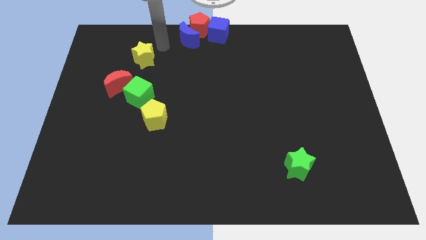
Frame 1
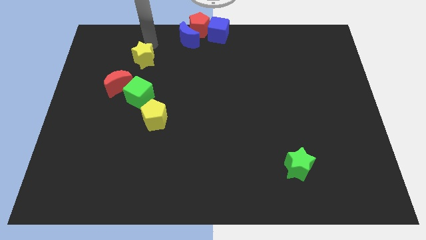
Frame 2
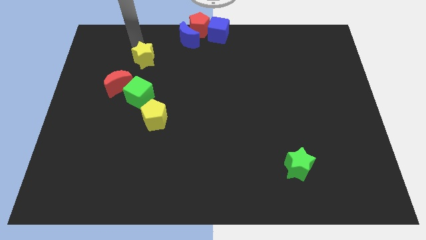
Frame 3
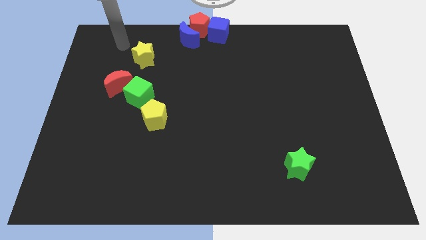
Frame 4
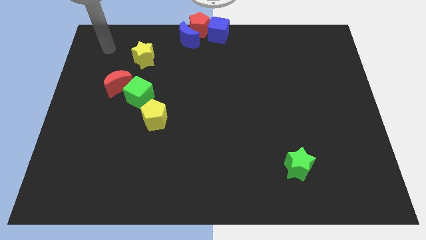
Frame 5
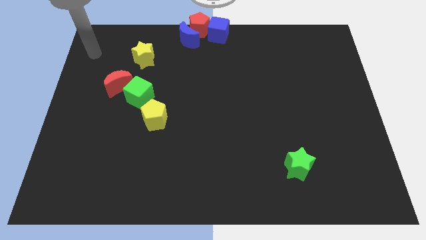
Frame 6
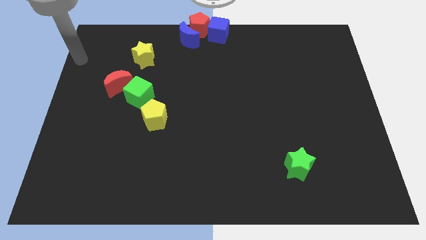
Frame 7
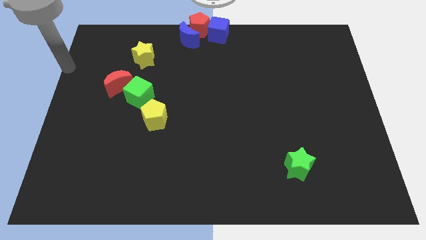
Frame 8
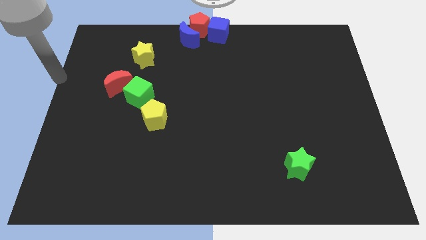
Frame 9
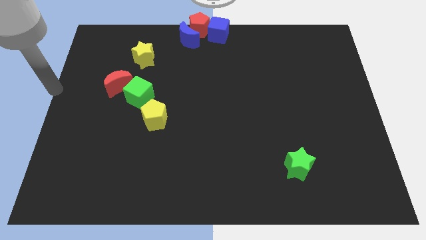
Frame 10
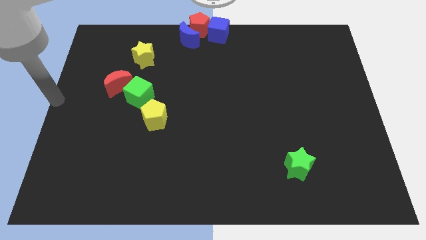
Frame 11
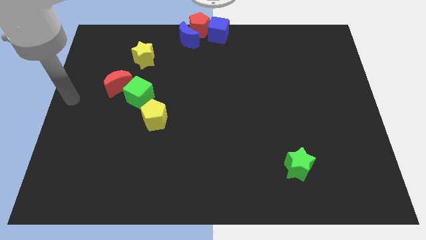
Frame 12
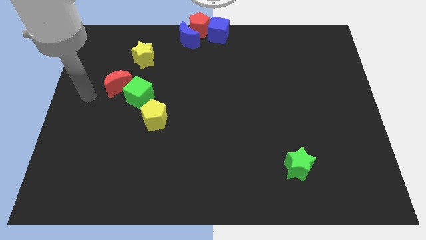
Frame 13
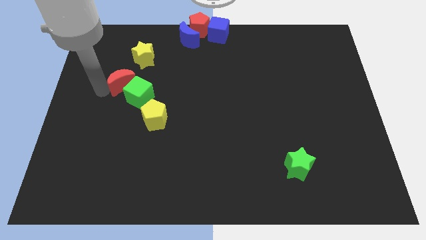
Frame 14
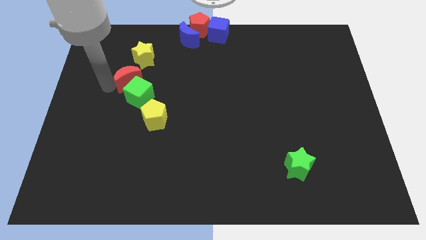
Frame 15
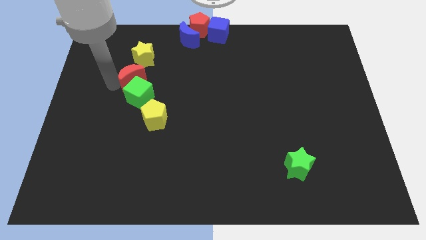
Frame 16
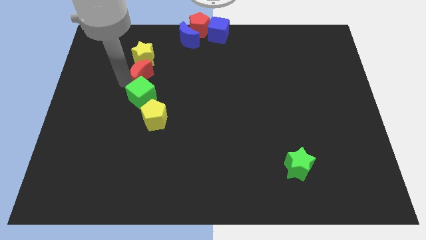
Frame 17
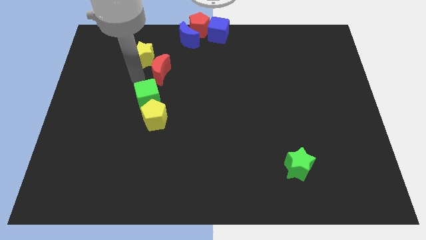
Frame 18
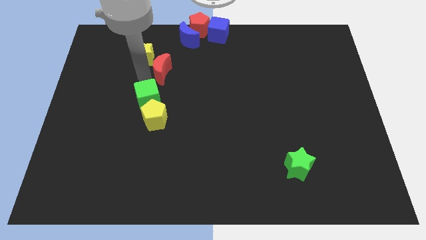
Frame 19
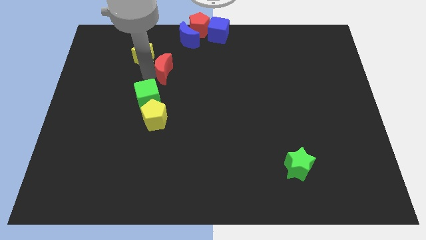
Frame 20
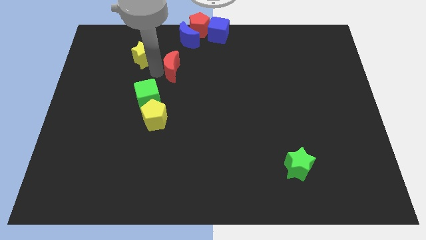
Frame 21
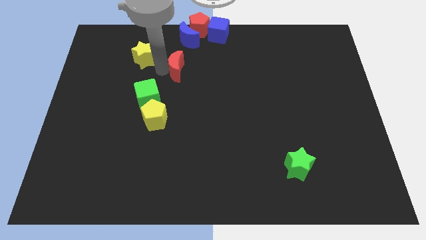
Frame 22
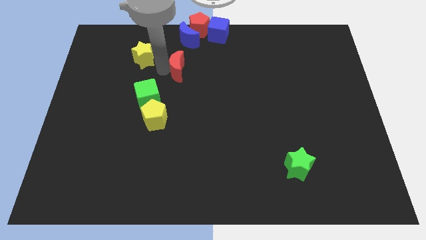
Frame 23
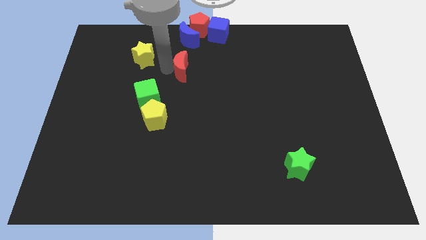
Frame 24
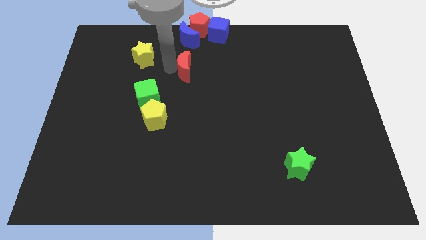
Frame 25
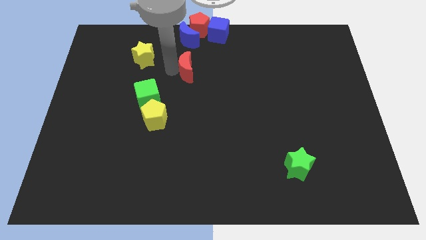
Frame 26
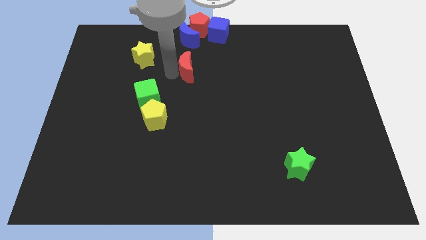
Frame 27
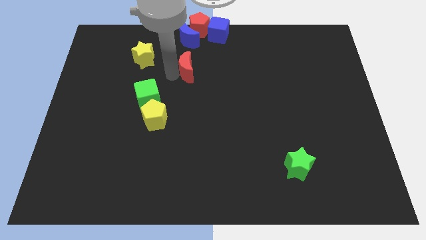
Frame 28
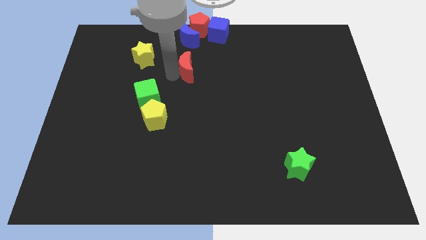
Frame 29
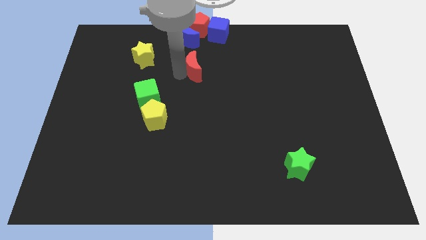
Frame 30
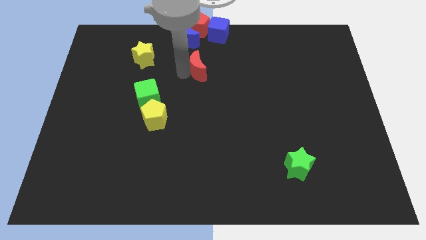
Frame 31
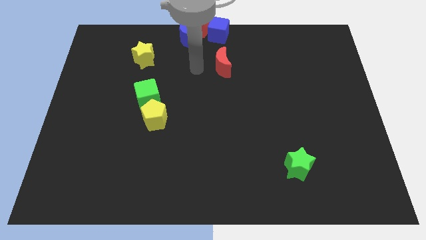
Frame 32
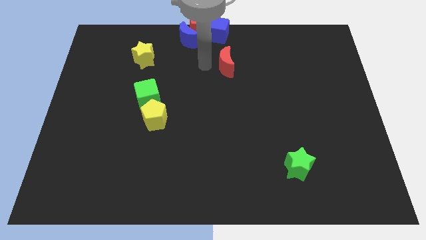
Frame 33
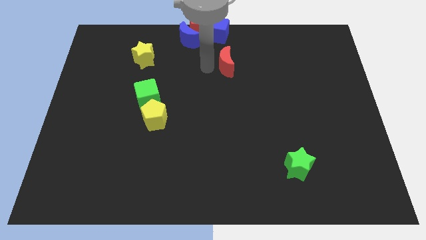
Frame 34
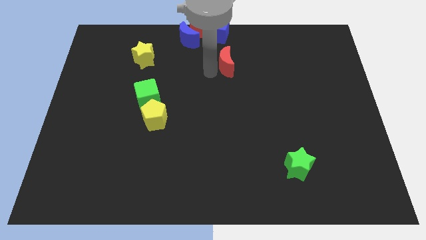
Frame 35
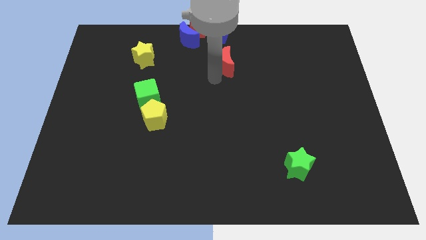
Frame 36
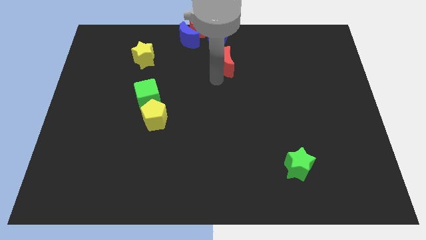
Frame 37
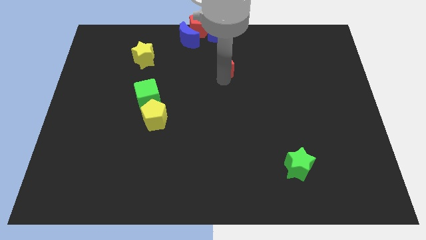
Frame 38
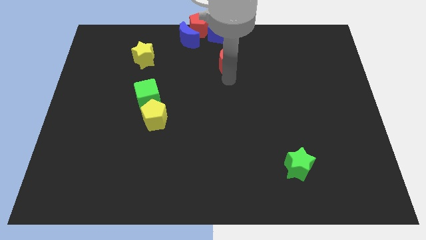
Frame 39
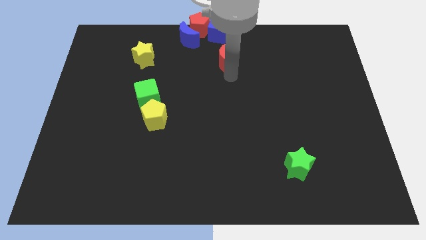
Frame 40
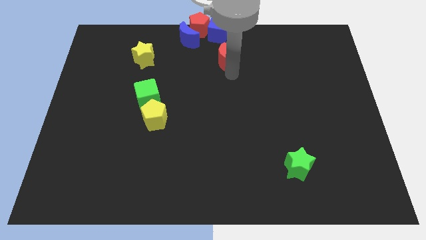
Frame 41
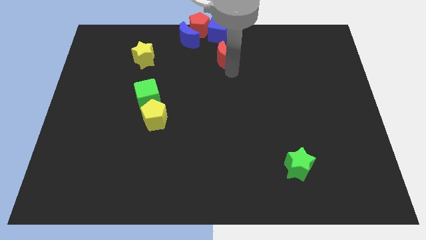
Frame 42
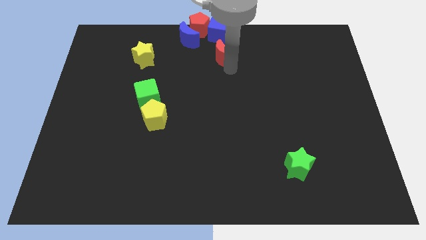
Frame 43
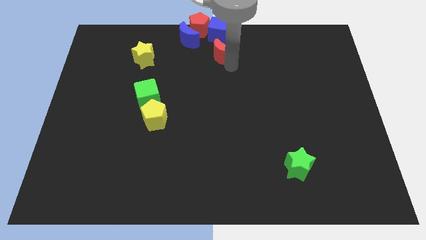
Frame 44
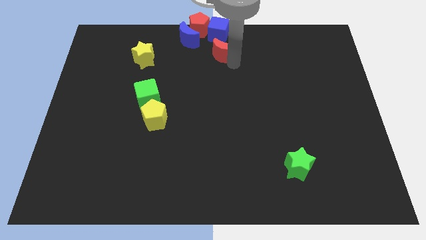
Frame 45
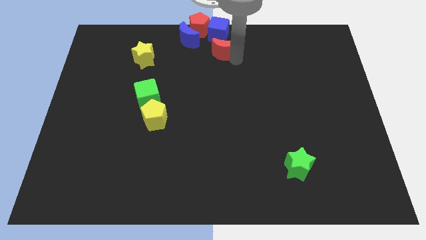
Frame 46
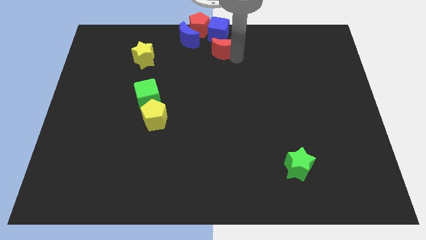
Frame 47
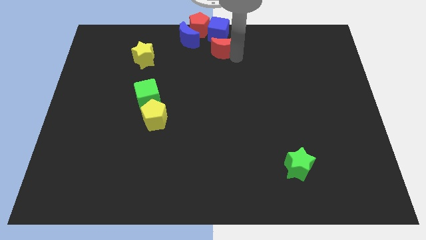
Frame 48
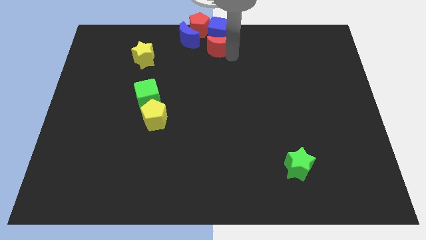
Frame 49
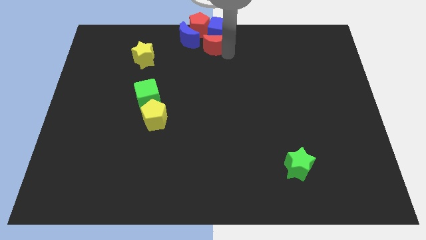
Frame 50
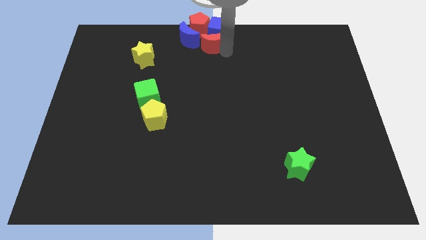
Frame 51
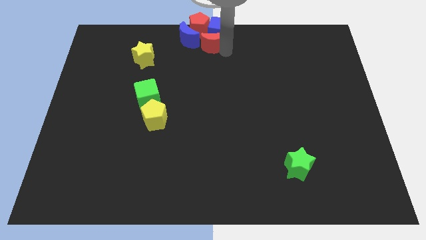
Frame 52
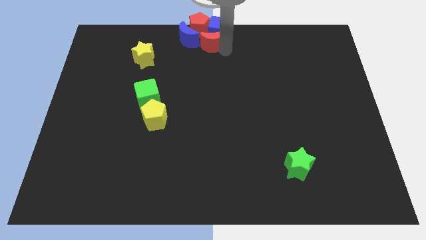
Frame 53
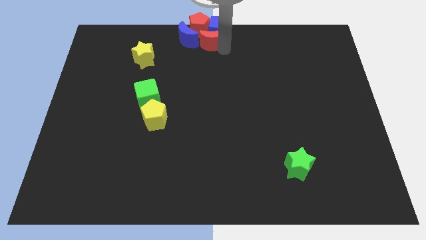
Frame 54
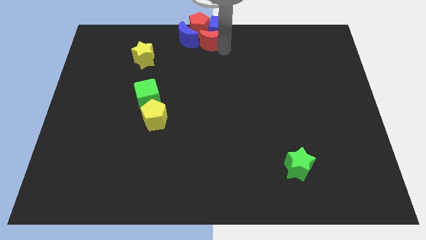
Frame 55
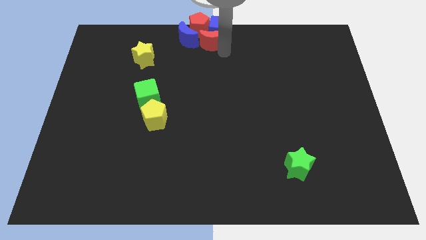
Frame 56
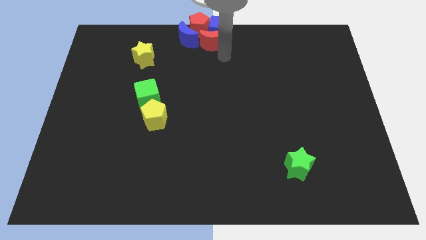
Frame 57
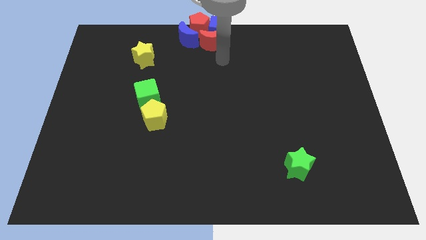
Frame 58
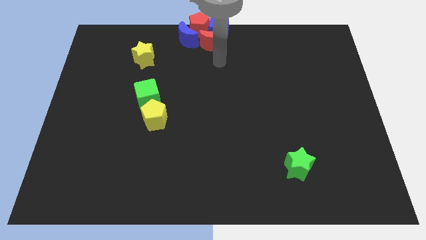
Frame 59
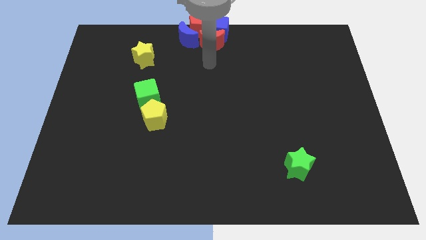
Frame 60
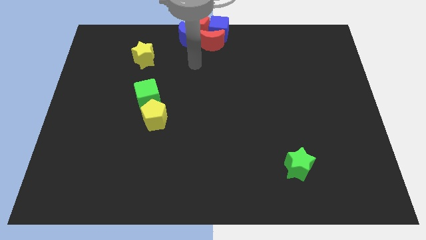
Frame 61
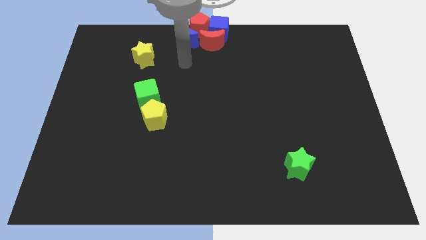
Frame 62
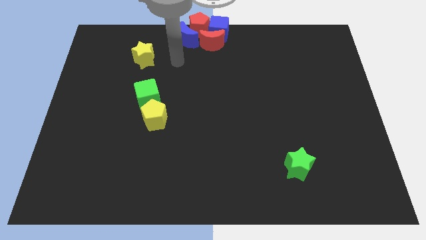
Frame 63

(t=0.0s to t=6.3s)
push the red crescent into blue blocks

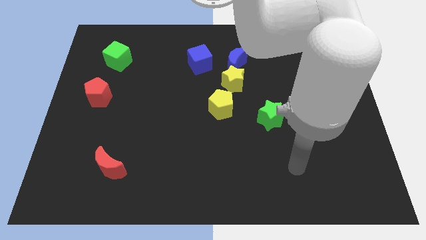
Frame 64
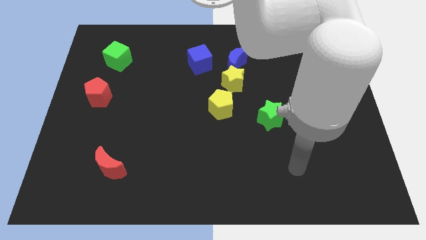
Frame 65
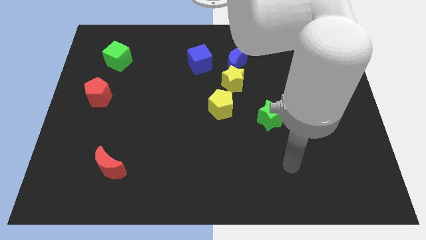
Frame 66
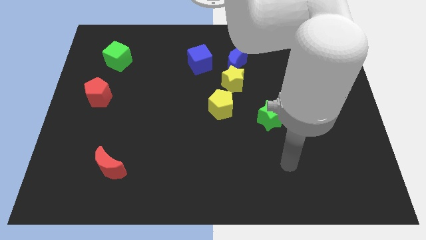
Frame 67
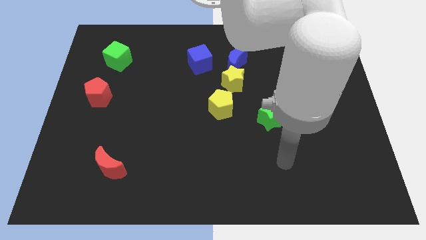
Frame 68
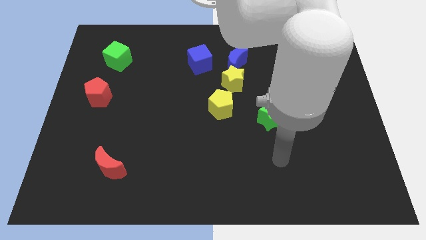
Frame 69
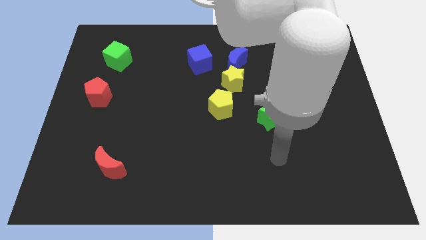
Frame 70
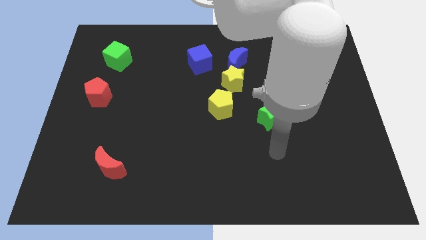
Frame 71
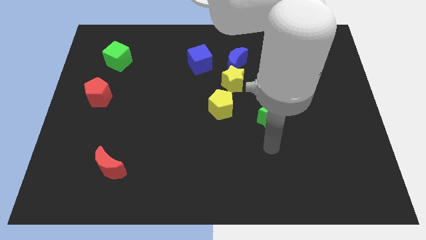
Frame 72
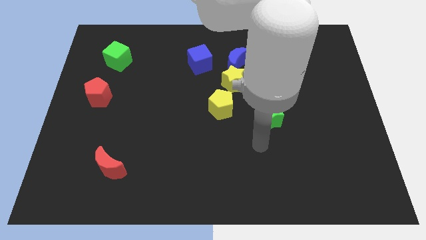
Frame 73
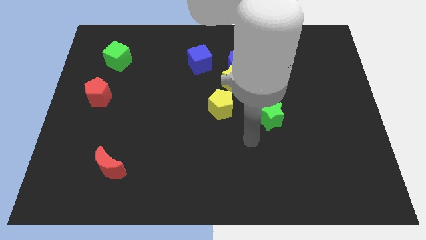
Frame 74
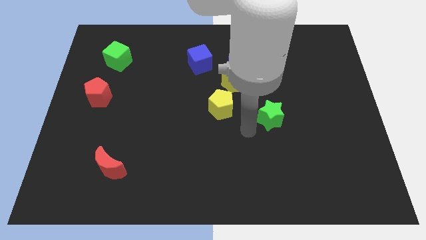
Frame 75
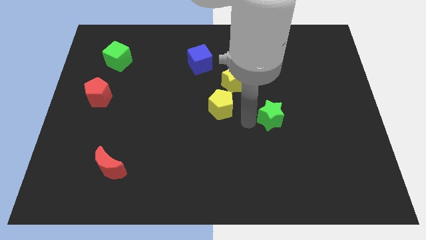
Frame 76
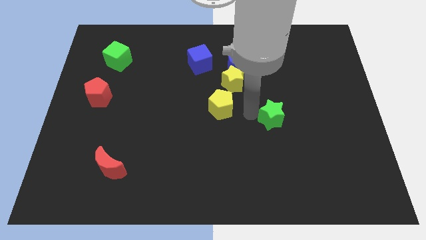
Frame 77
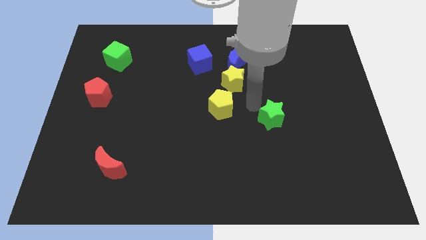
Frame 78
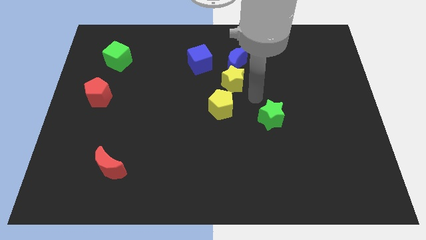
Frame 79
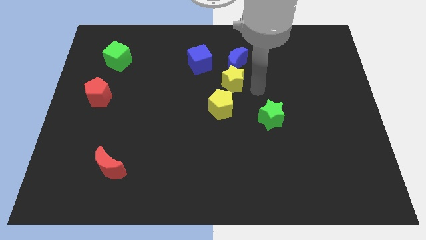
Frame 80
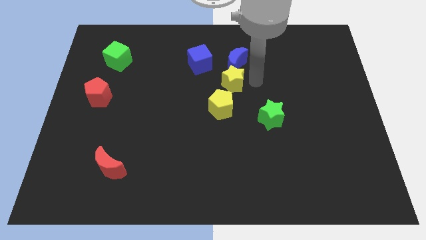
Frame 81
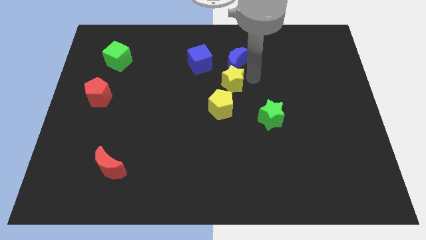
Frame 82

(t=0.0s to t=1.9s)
move your arm to the right side of the yellow star

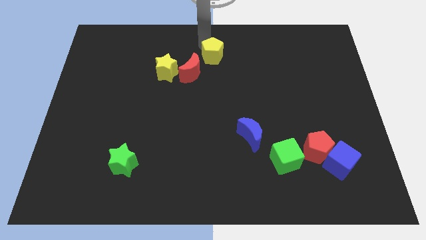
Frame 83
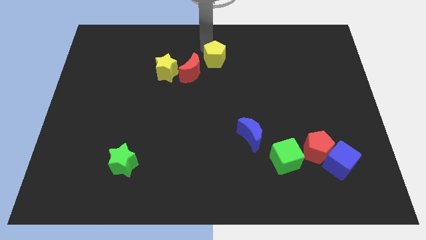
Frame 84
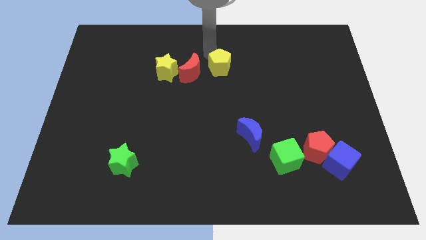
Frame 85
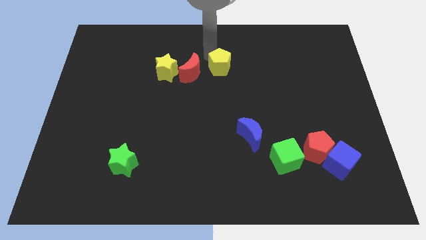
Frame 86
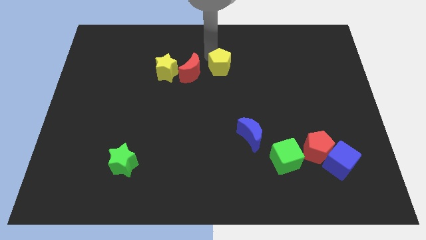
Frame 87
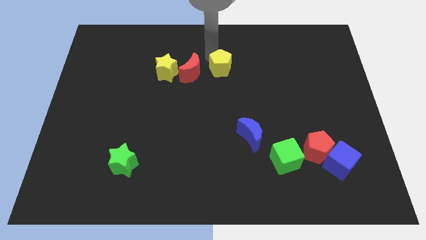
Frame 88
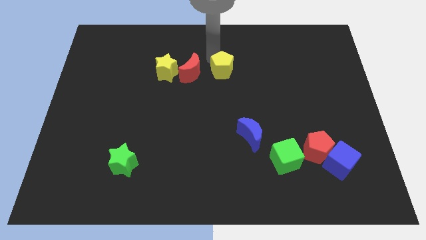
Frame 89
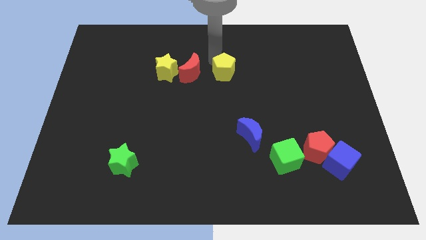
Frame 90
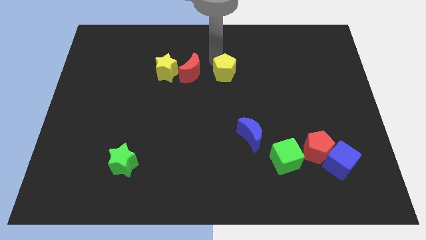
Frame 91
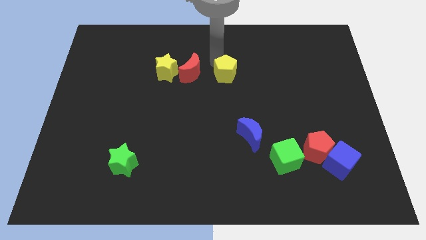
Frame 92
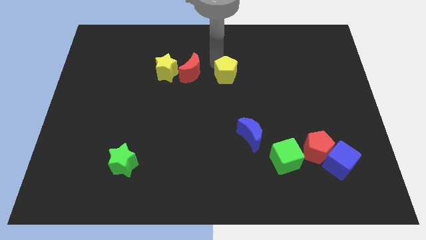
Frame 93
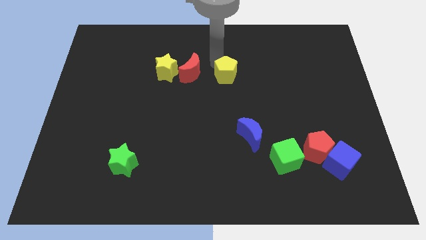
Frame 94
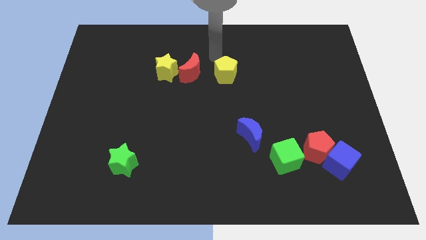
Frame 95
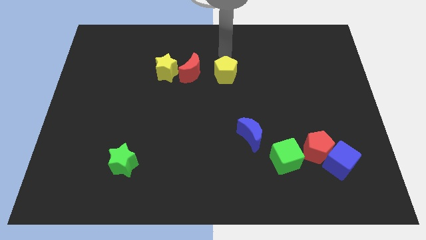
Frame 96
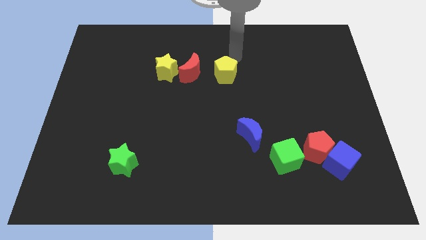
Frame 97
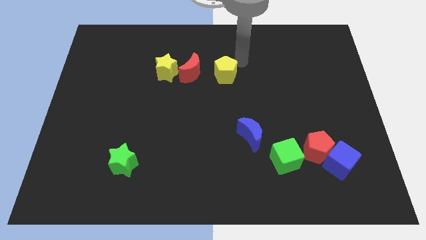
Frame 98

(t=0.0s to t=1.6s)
push the yellow pentagon downward
